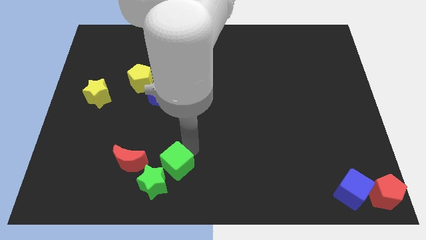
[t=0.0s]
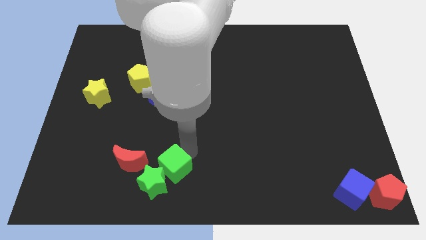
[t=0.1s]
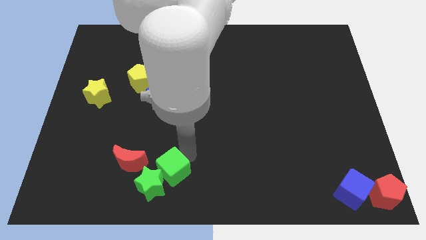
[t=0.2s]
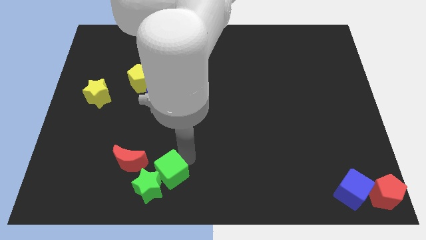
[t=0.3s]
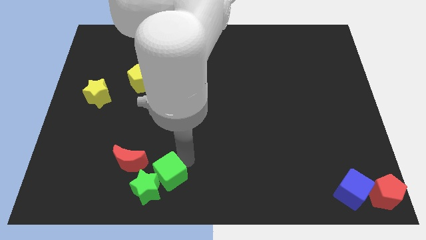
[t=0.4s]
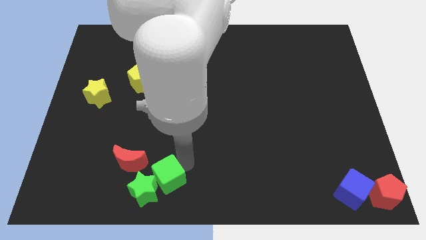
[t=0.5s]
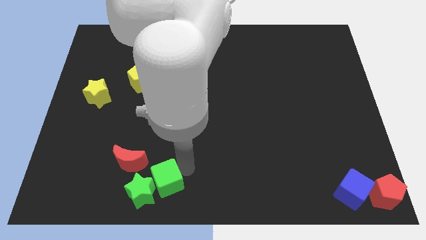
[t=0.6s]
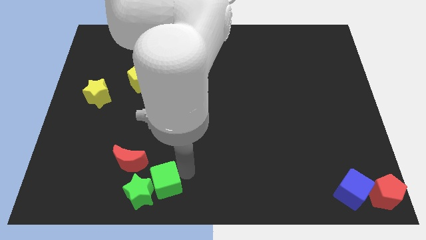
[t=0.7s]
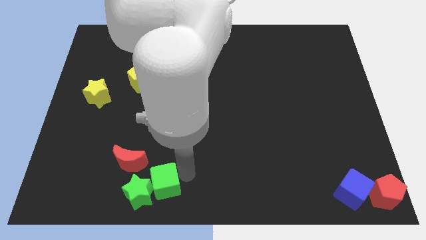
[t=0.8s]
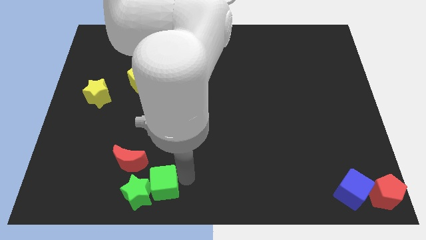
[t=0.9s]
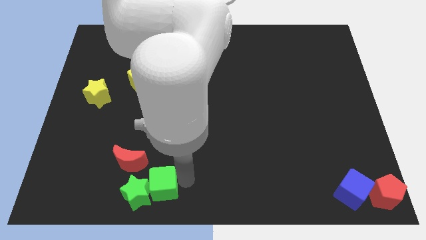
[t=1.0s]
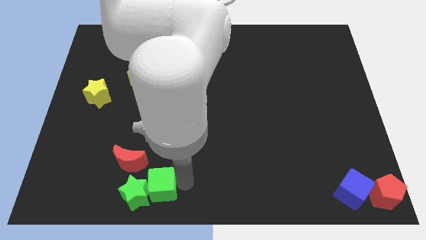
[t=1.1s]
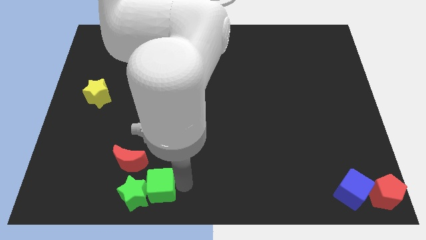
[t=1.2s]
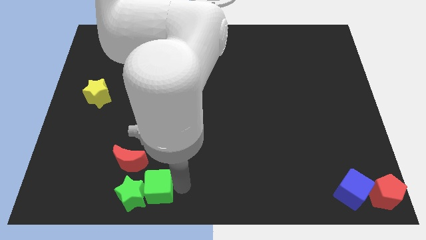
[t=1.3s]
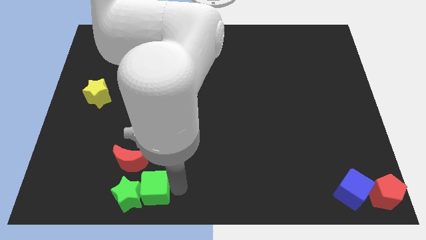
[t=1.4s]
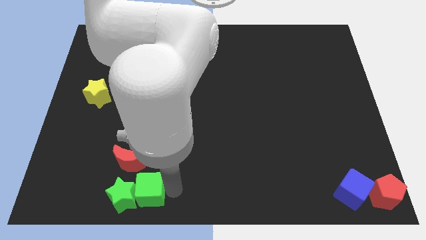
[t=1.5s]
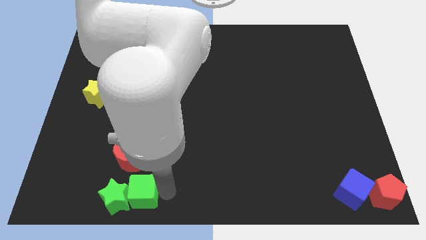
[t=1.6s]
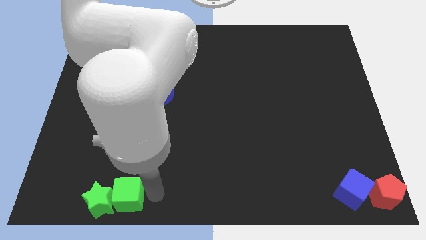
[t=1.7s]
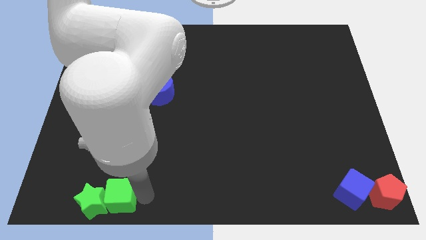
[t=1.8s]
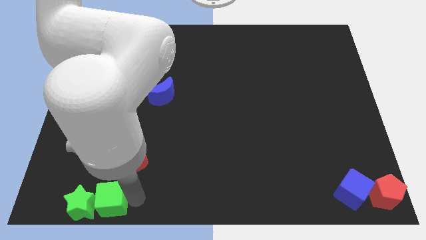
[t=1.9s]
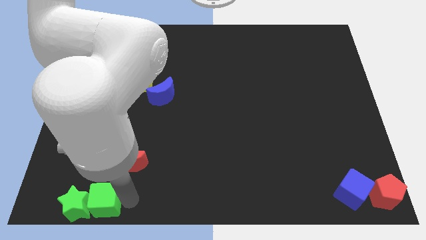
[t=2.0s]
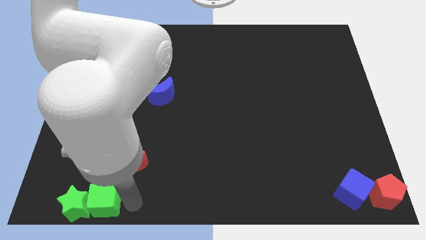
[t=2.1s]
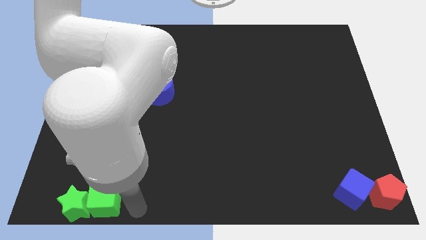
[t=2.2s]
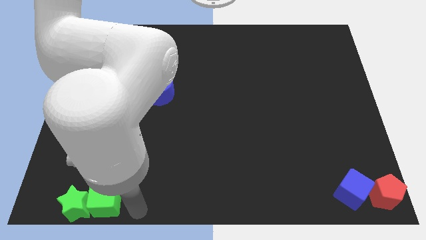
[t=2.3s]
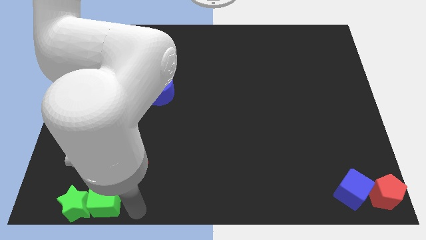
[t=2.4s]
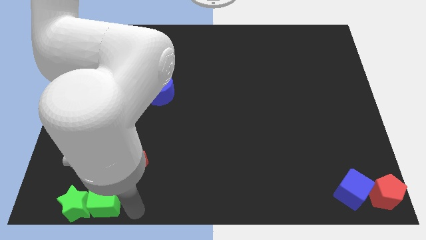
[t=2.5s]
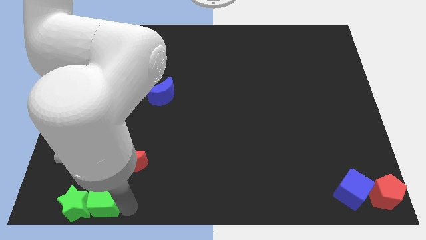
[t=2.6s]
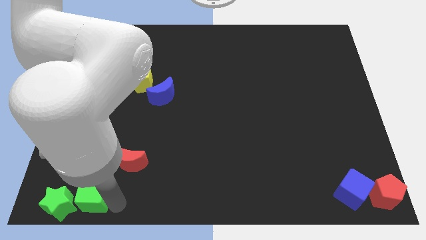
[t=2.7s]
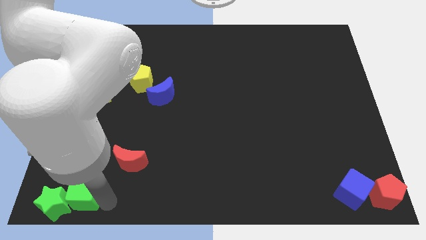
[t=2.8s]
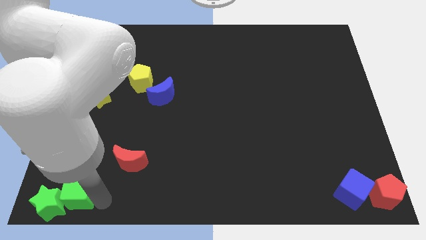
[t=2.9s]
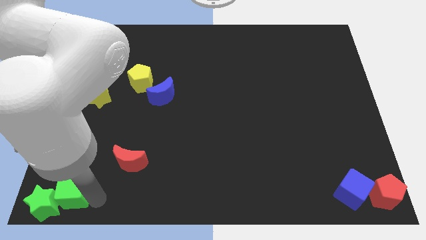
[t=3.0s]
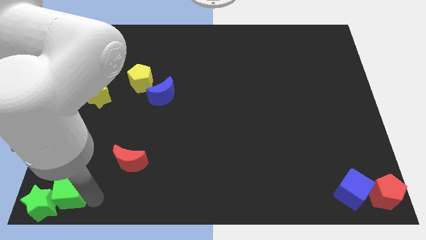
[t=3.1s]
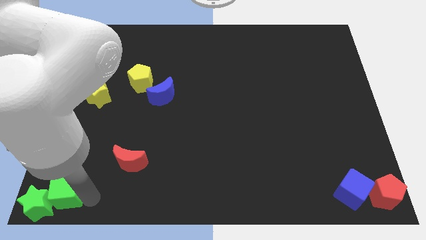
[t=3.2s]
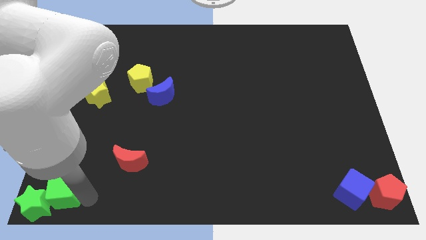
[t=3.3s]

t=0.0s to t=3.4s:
move the green blocks towards the bottom left corner of the board

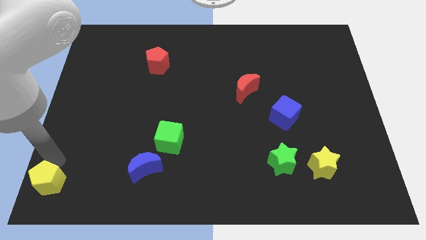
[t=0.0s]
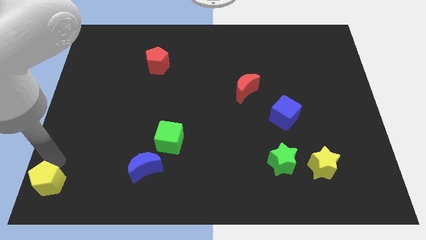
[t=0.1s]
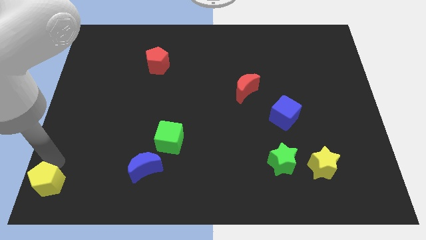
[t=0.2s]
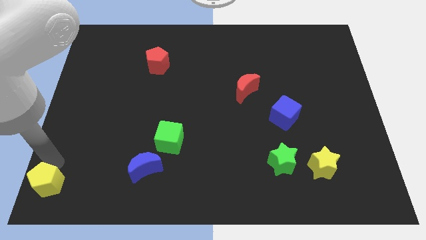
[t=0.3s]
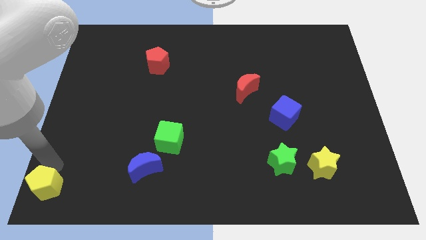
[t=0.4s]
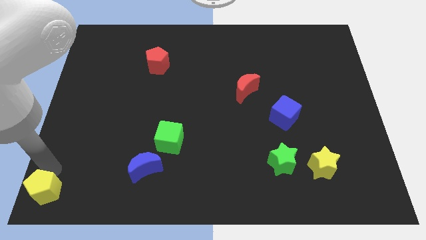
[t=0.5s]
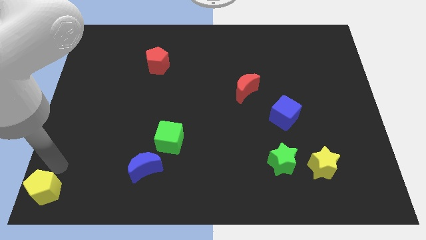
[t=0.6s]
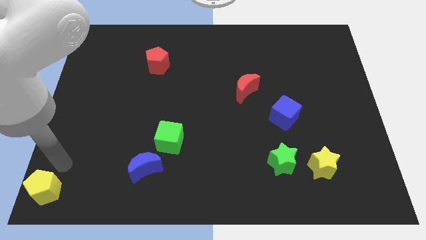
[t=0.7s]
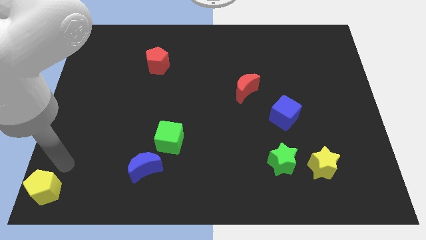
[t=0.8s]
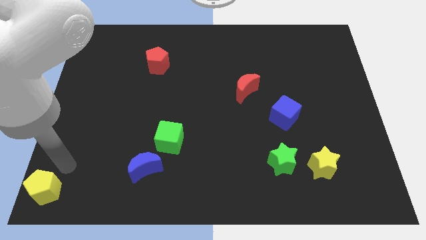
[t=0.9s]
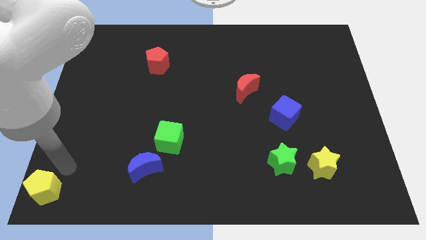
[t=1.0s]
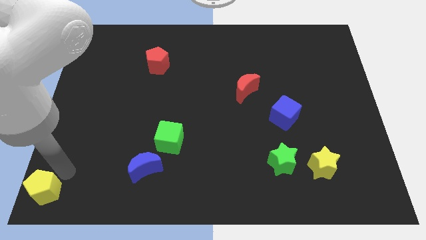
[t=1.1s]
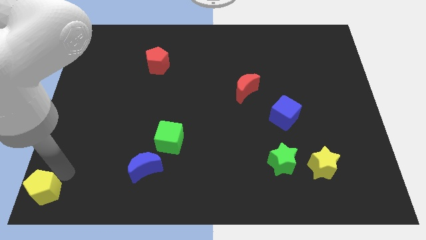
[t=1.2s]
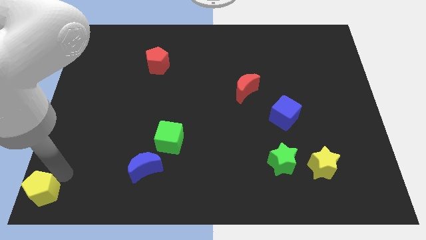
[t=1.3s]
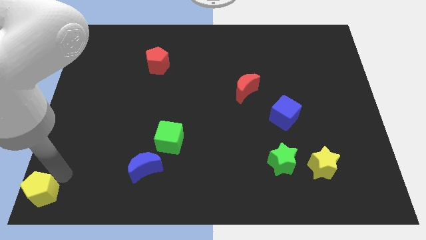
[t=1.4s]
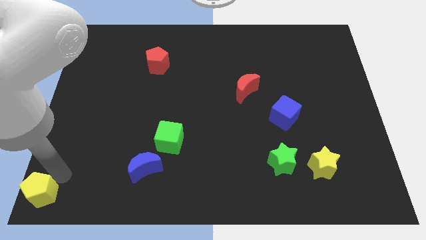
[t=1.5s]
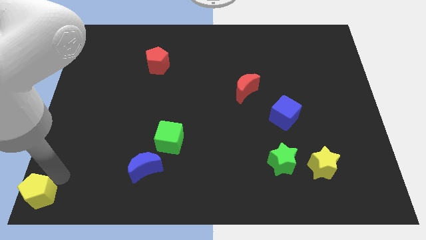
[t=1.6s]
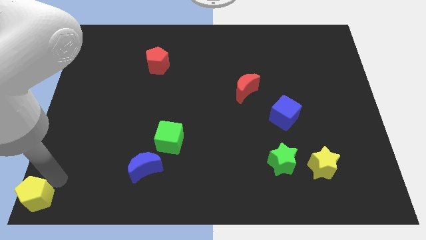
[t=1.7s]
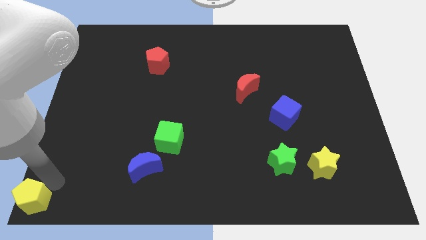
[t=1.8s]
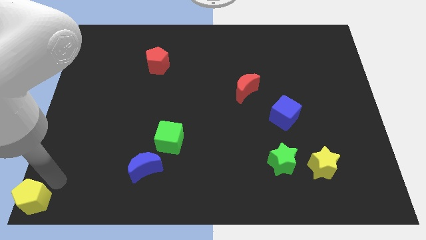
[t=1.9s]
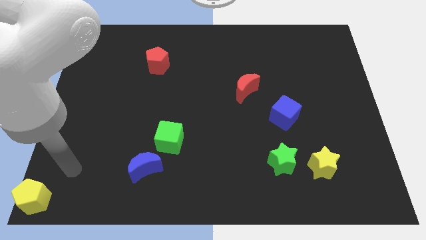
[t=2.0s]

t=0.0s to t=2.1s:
slide yellow pentagon to the bottom left corner

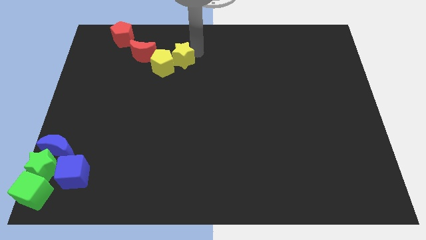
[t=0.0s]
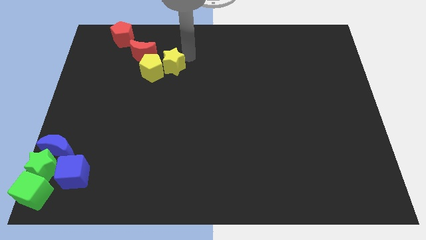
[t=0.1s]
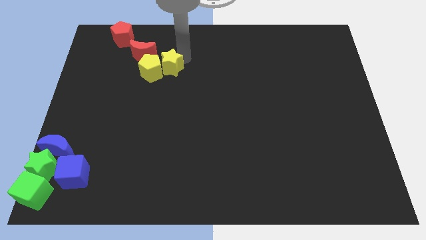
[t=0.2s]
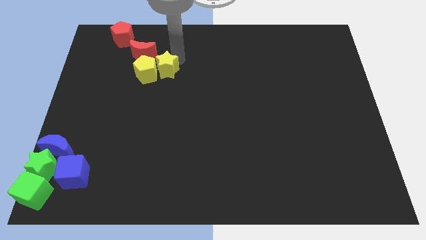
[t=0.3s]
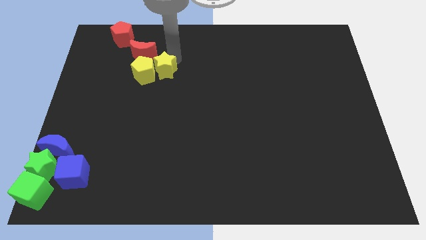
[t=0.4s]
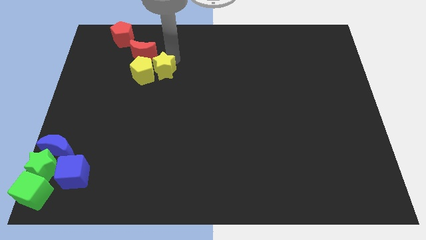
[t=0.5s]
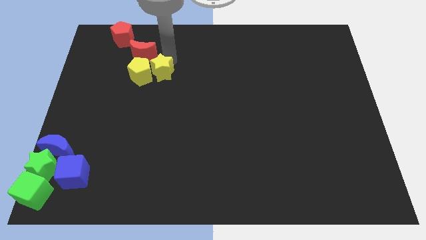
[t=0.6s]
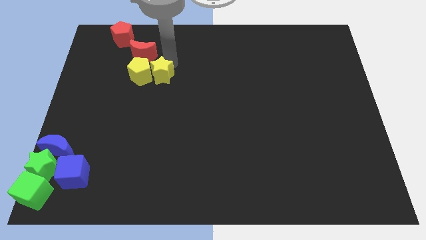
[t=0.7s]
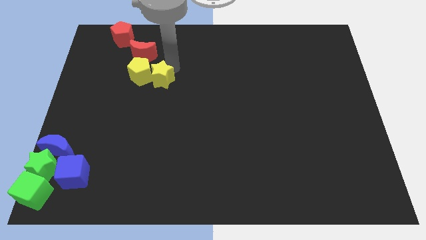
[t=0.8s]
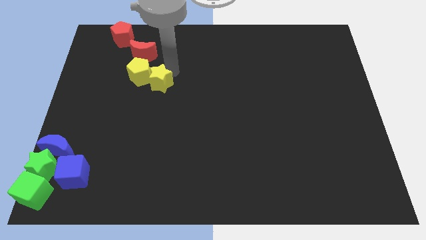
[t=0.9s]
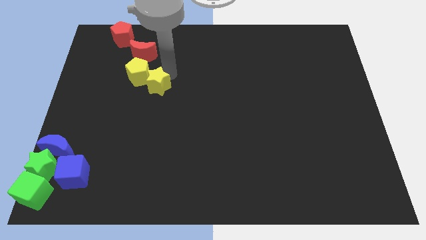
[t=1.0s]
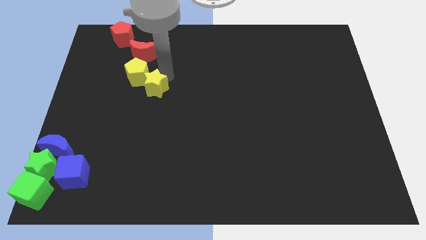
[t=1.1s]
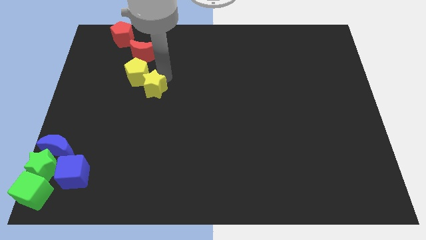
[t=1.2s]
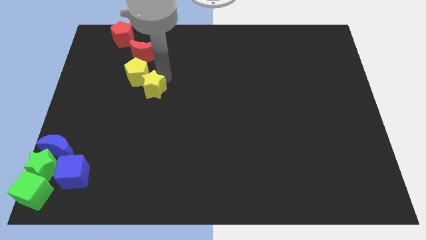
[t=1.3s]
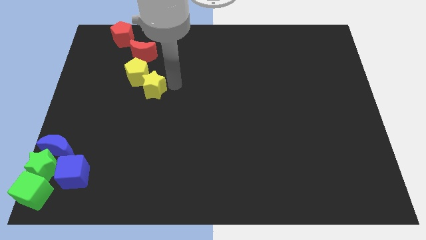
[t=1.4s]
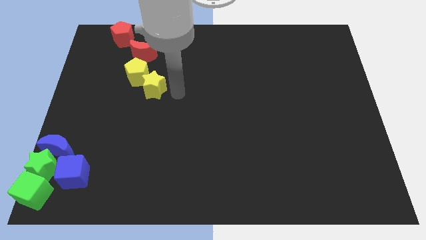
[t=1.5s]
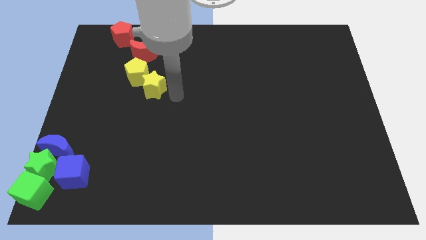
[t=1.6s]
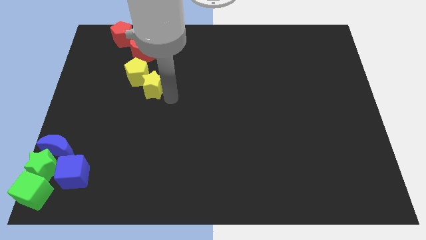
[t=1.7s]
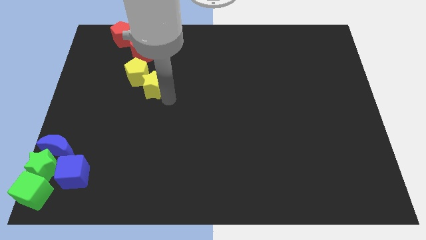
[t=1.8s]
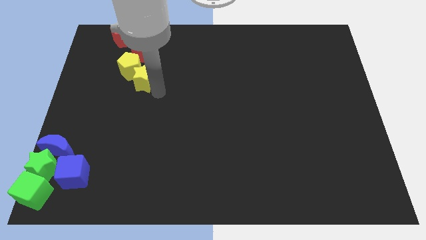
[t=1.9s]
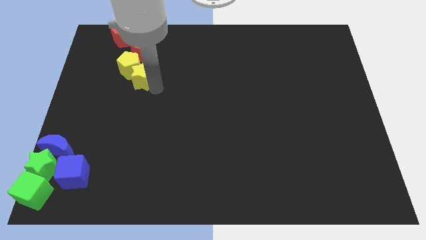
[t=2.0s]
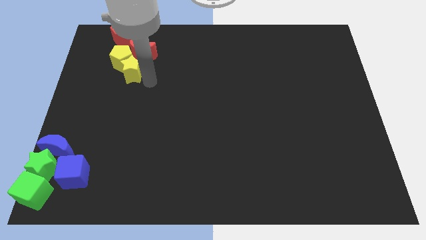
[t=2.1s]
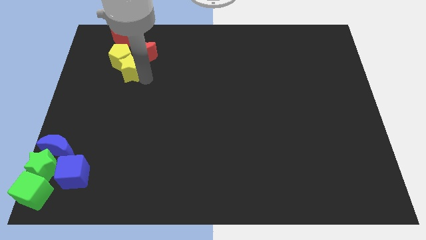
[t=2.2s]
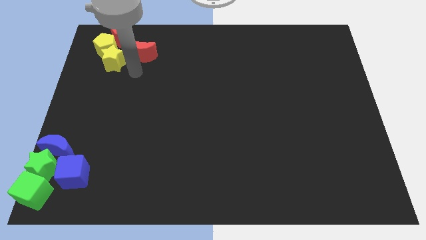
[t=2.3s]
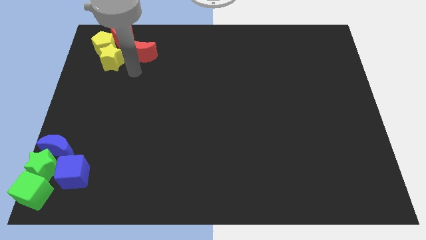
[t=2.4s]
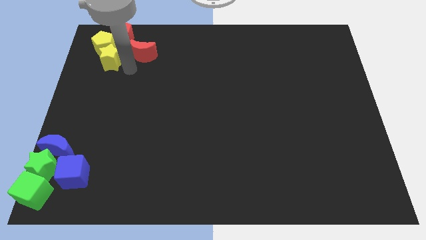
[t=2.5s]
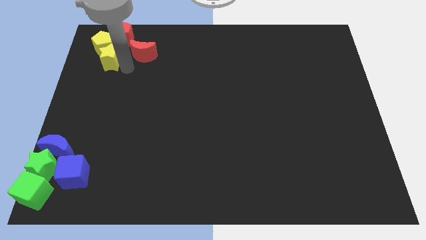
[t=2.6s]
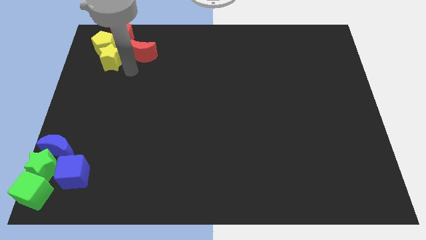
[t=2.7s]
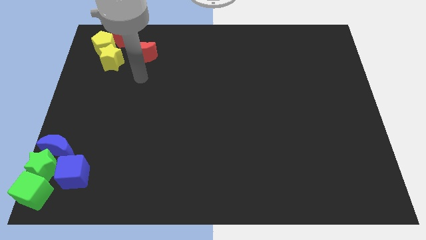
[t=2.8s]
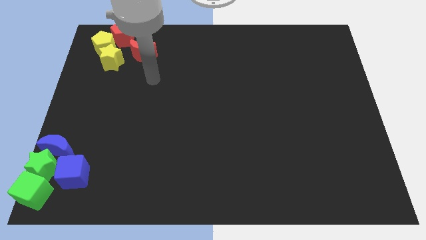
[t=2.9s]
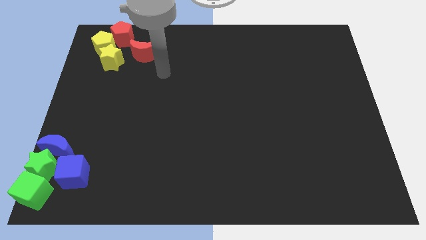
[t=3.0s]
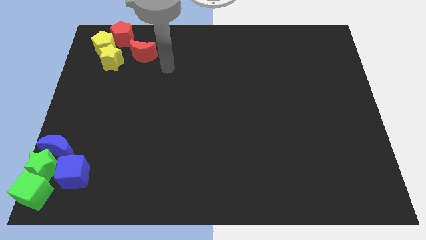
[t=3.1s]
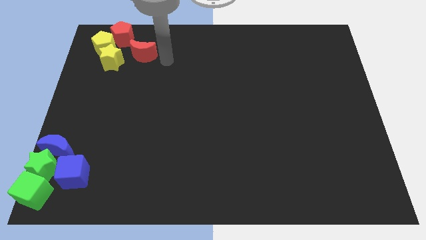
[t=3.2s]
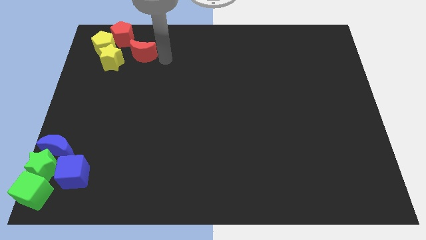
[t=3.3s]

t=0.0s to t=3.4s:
slide the yellow star along with the yellow pentagon towards the top left side of the board
